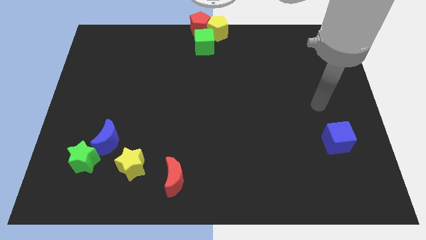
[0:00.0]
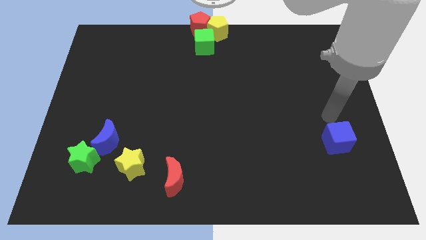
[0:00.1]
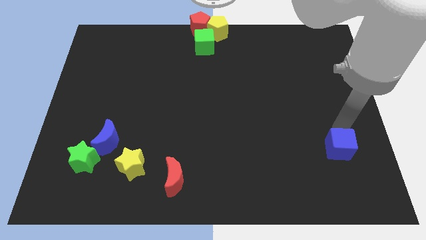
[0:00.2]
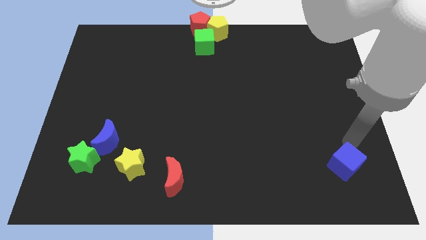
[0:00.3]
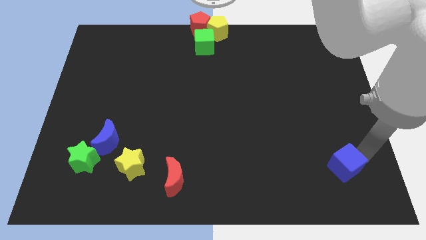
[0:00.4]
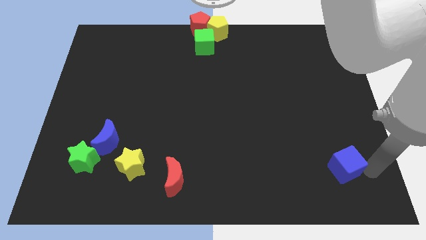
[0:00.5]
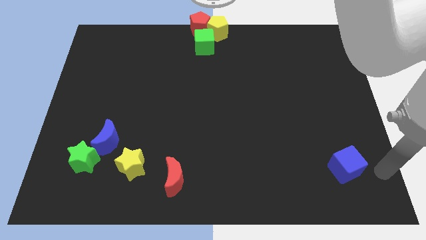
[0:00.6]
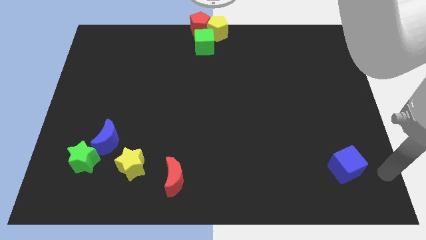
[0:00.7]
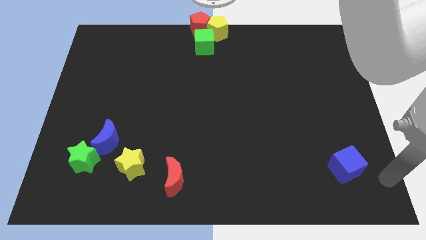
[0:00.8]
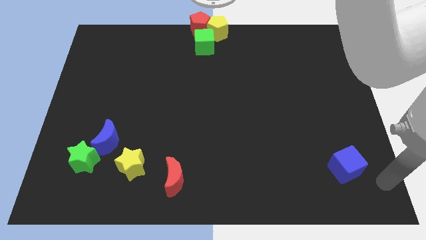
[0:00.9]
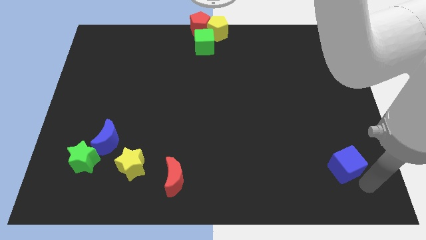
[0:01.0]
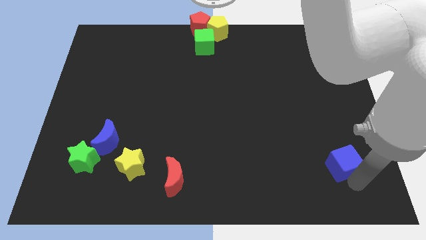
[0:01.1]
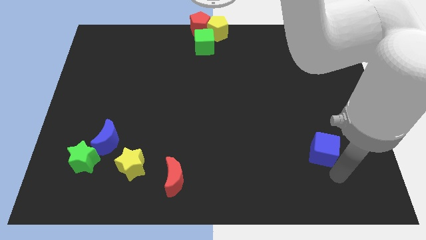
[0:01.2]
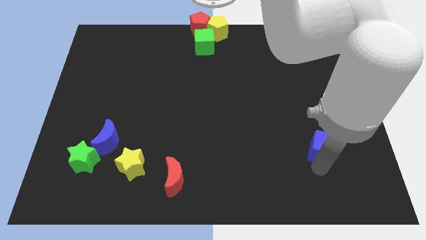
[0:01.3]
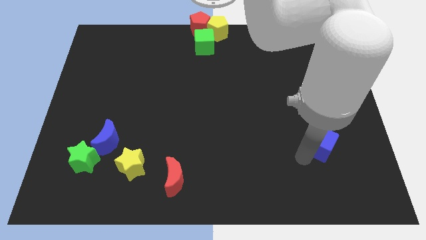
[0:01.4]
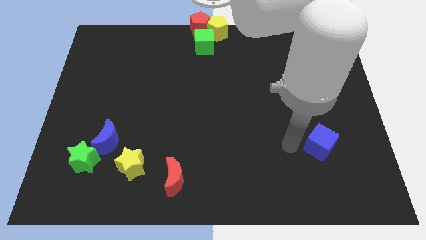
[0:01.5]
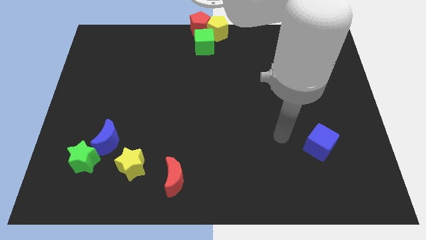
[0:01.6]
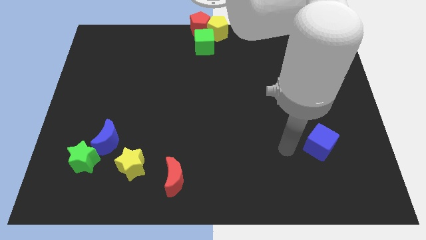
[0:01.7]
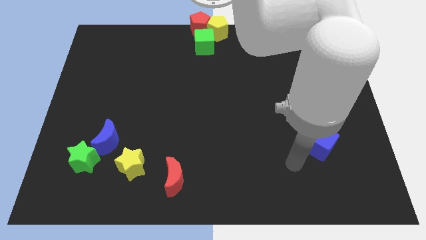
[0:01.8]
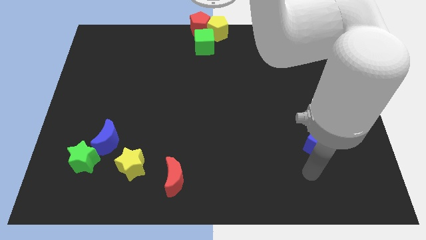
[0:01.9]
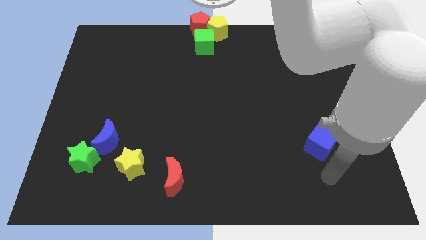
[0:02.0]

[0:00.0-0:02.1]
slide the blue cube diagonally to the red moon

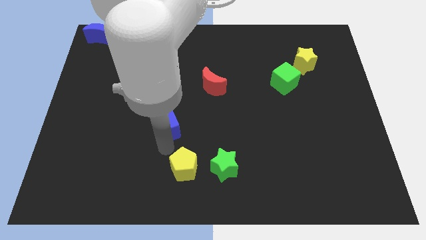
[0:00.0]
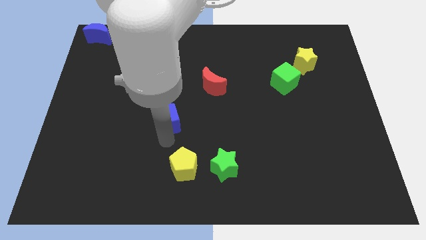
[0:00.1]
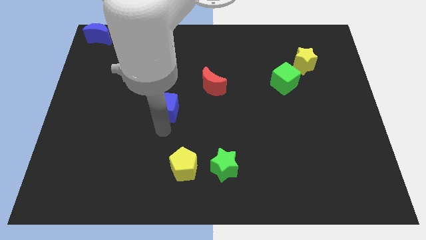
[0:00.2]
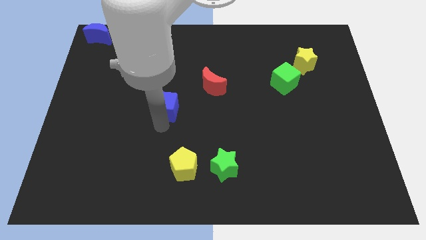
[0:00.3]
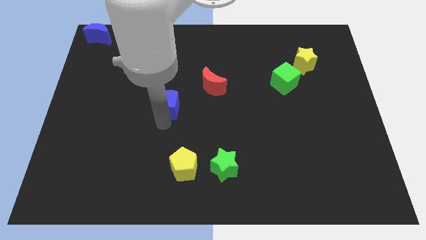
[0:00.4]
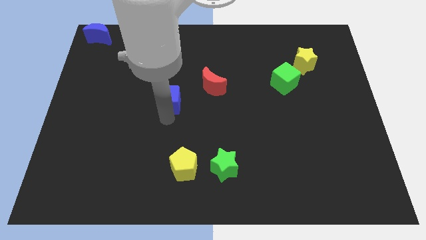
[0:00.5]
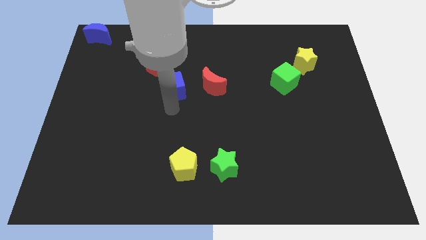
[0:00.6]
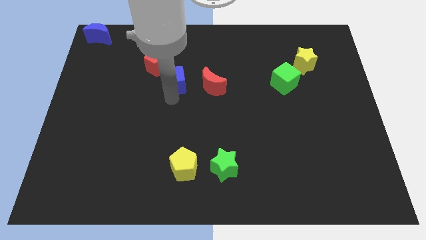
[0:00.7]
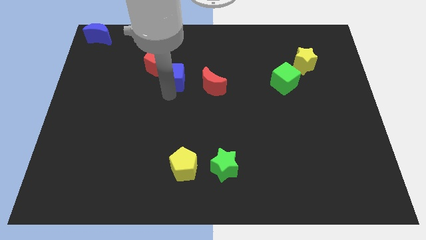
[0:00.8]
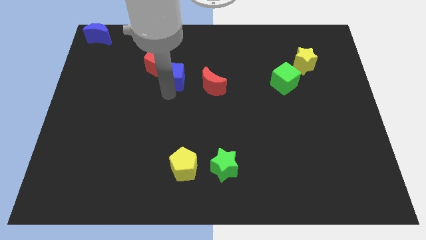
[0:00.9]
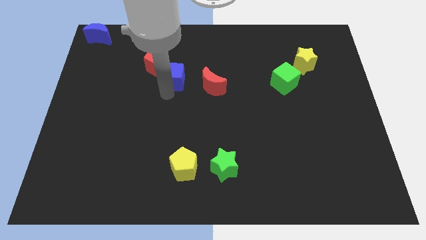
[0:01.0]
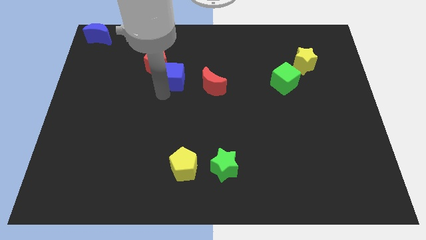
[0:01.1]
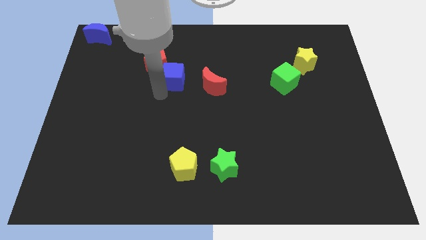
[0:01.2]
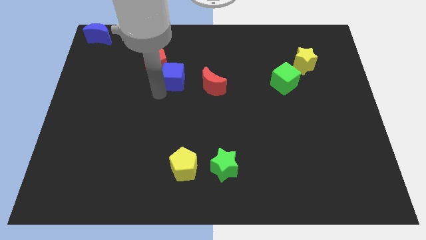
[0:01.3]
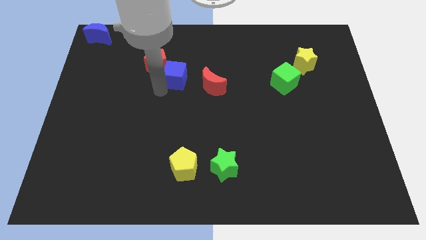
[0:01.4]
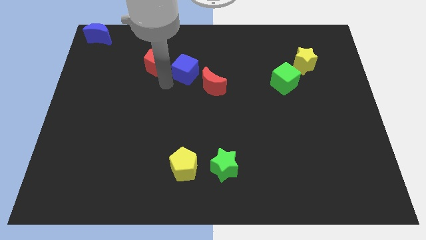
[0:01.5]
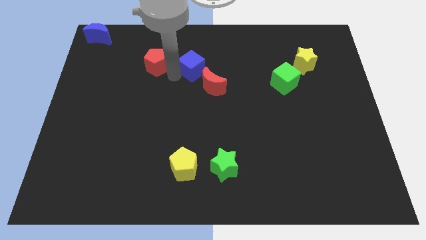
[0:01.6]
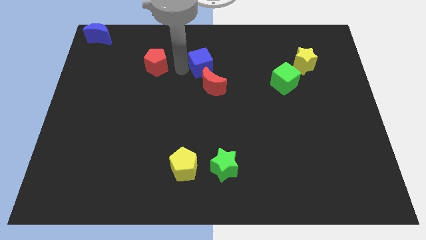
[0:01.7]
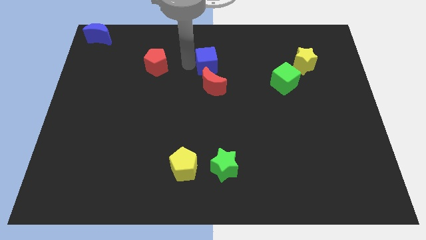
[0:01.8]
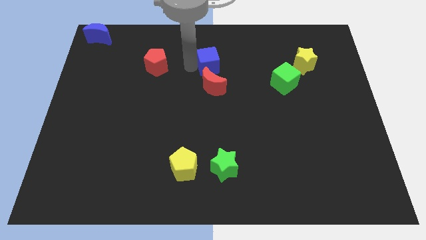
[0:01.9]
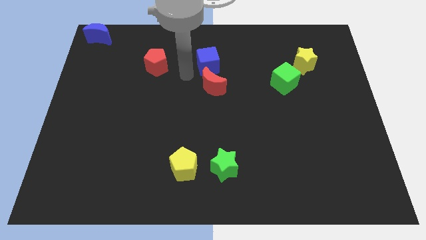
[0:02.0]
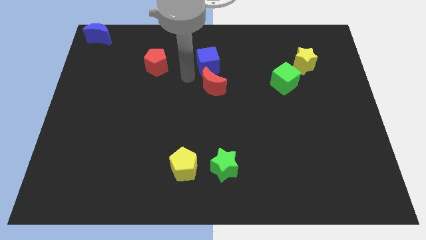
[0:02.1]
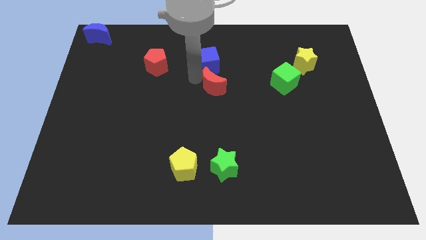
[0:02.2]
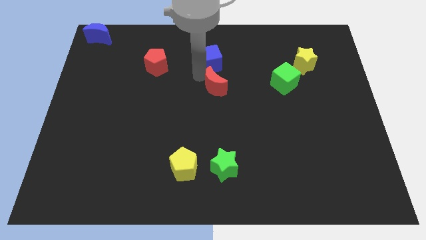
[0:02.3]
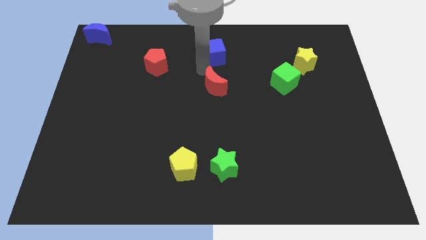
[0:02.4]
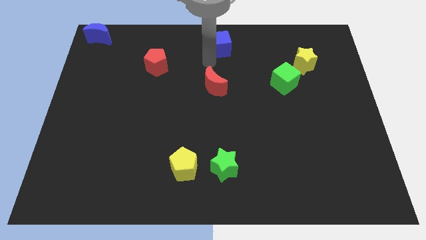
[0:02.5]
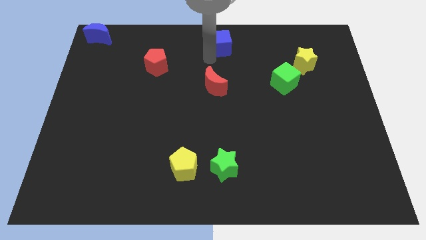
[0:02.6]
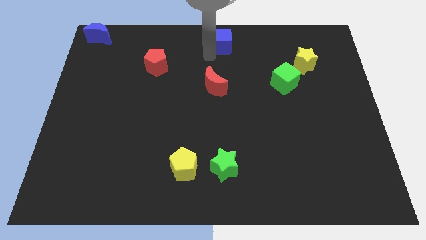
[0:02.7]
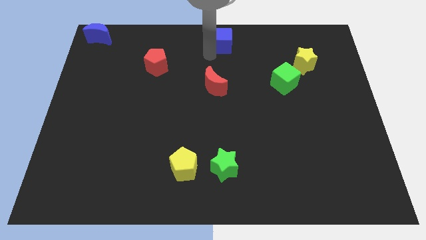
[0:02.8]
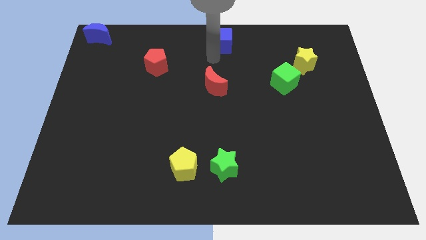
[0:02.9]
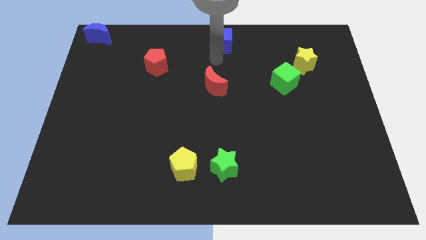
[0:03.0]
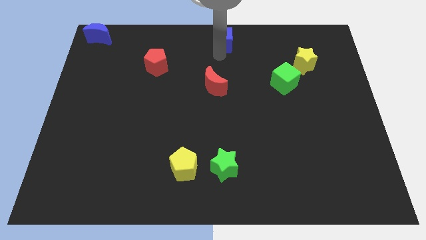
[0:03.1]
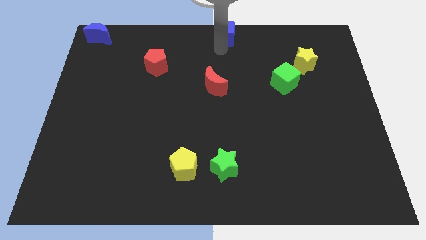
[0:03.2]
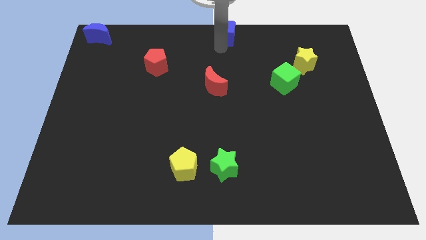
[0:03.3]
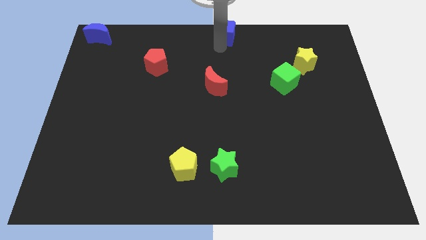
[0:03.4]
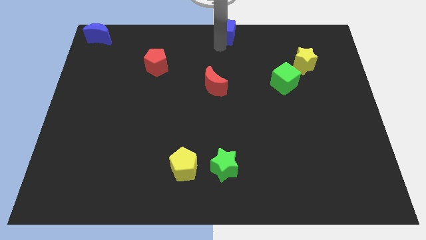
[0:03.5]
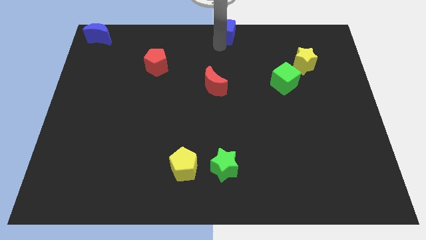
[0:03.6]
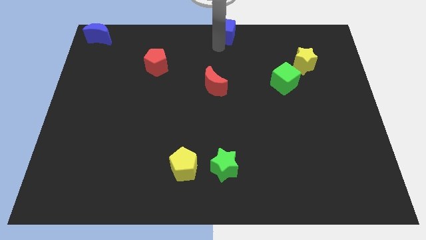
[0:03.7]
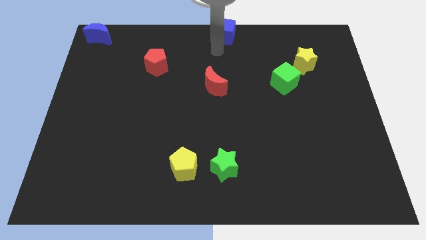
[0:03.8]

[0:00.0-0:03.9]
place the blue cube at the top center of the board

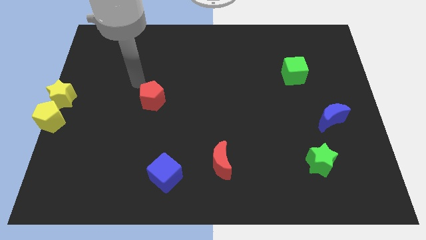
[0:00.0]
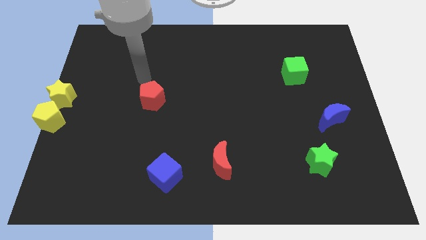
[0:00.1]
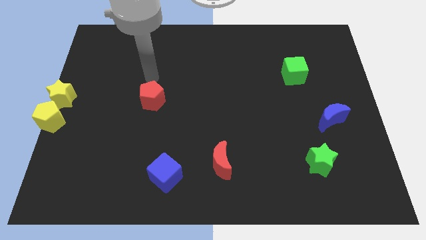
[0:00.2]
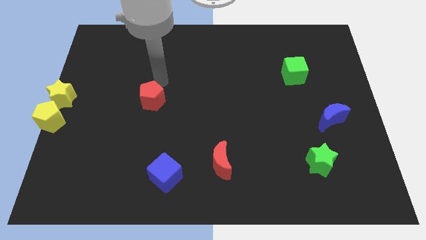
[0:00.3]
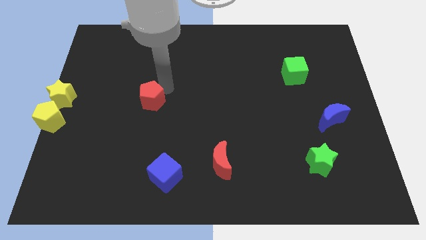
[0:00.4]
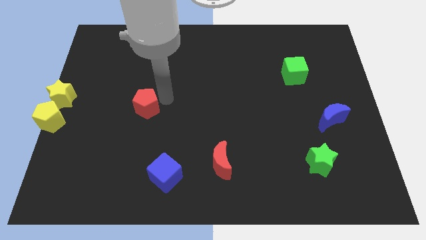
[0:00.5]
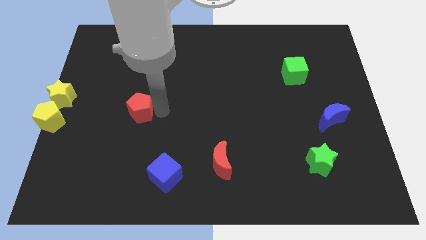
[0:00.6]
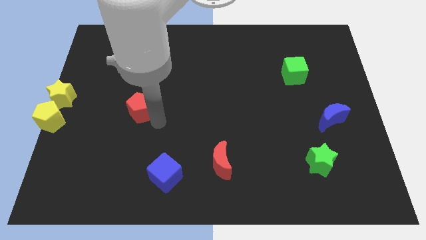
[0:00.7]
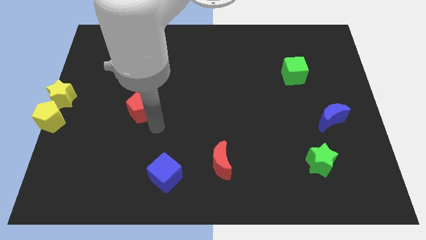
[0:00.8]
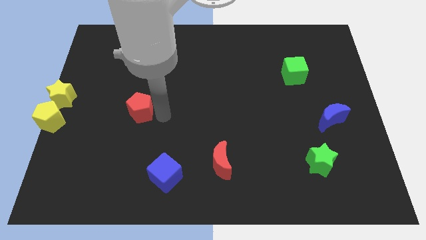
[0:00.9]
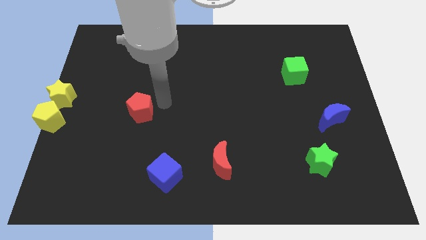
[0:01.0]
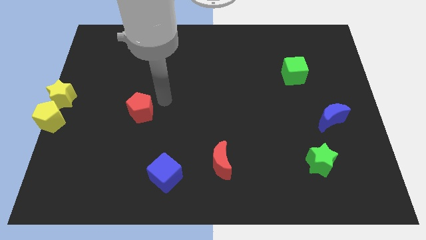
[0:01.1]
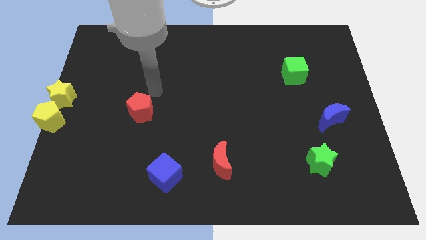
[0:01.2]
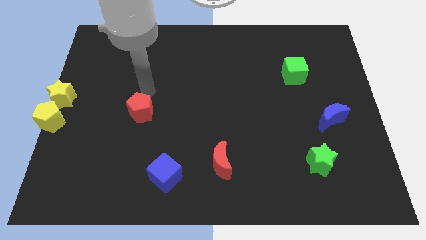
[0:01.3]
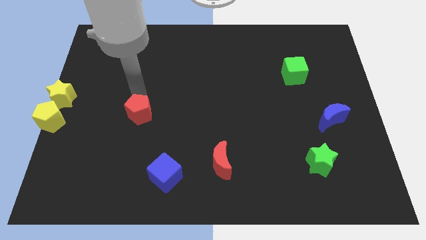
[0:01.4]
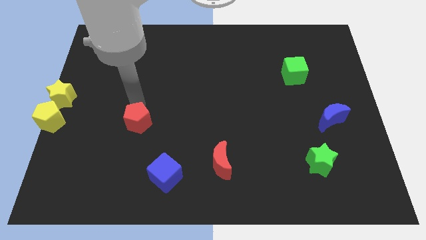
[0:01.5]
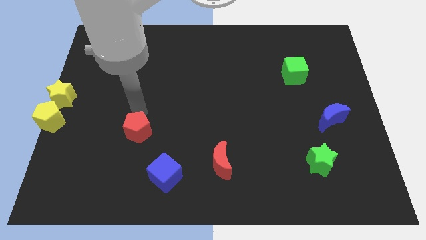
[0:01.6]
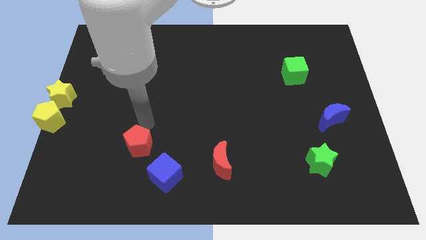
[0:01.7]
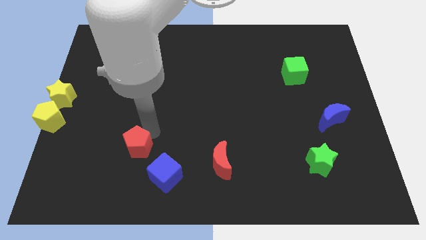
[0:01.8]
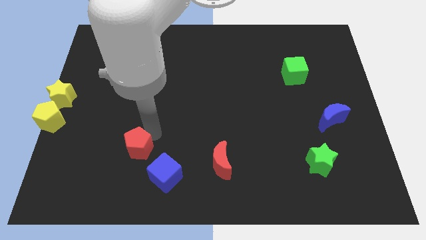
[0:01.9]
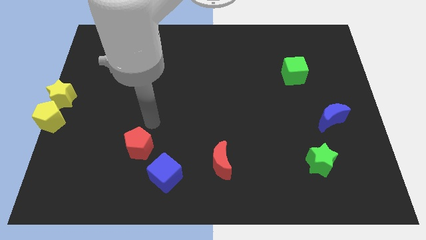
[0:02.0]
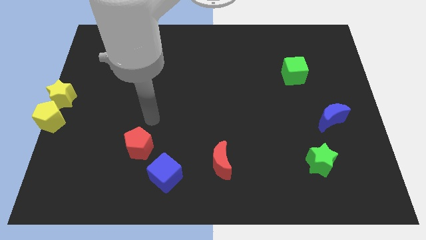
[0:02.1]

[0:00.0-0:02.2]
move the red pentagon to the top left of the blue cube

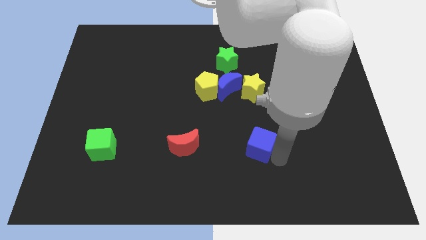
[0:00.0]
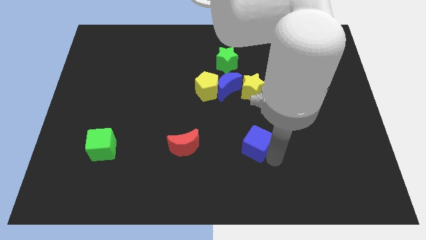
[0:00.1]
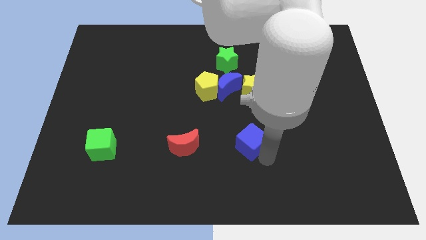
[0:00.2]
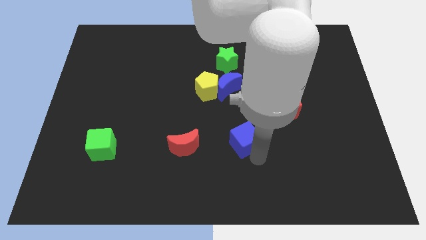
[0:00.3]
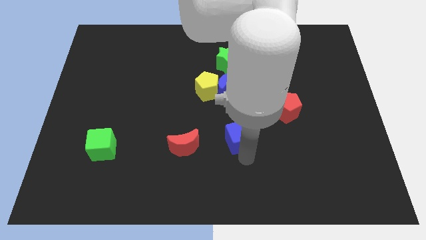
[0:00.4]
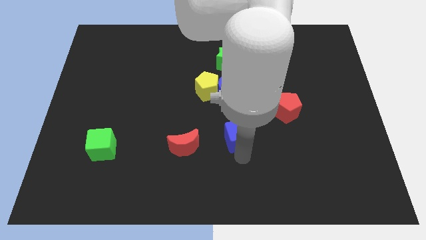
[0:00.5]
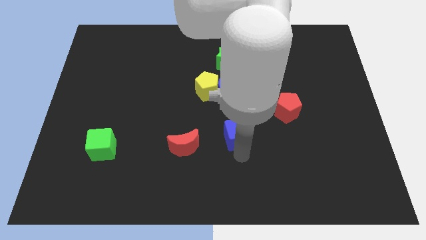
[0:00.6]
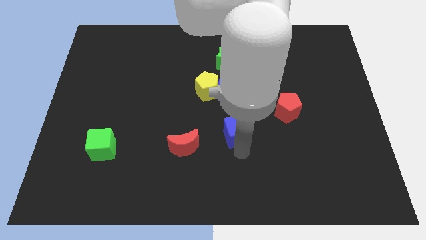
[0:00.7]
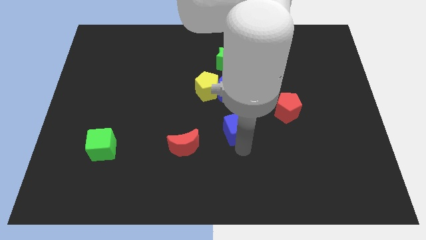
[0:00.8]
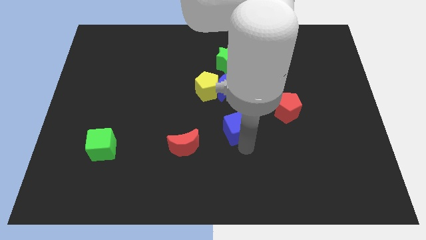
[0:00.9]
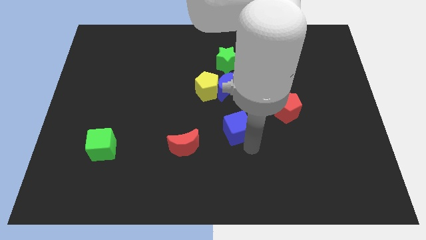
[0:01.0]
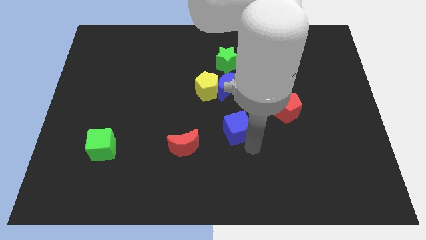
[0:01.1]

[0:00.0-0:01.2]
push the blue cube towards the right side of the red crescent
